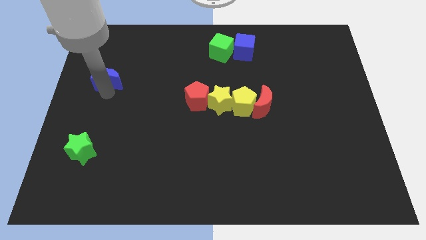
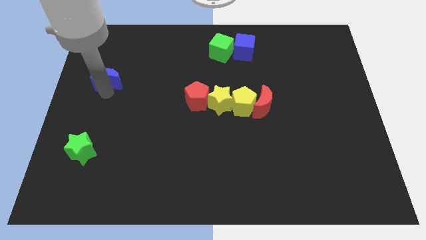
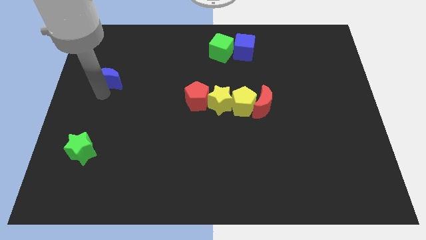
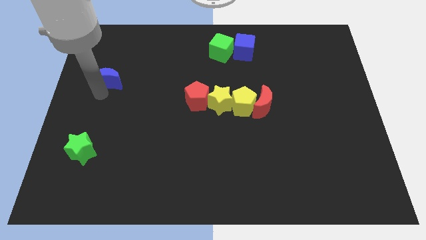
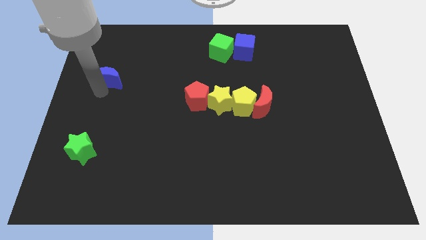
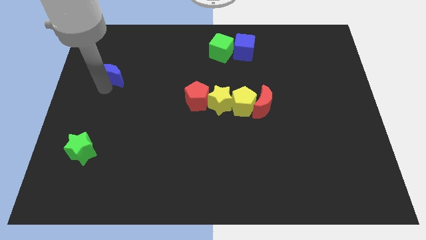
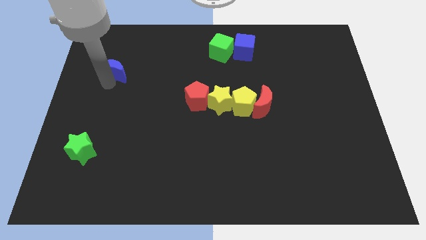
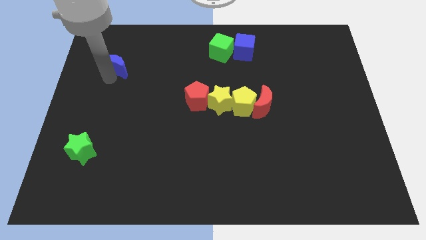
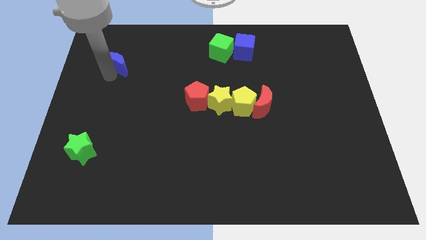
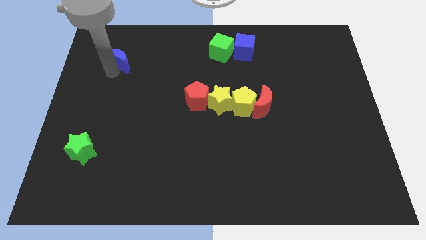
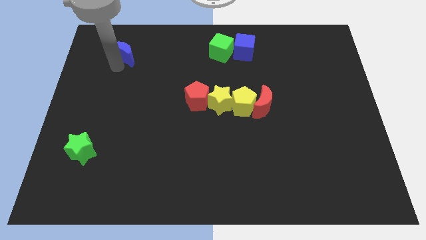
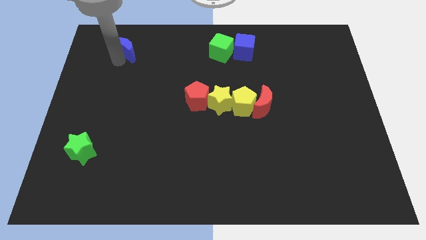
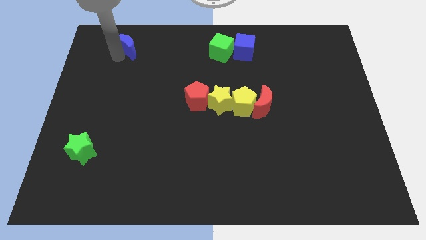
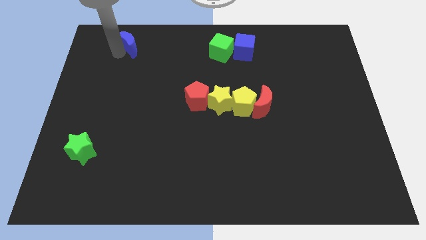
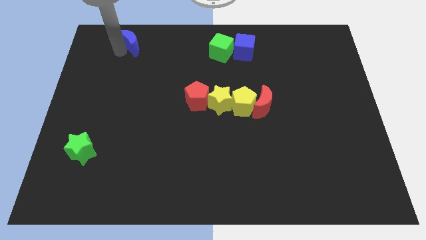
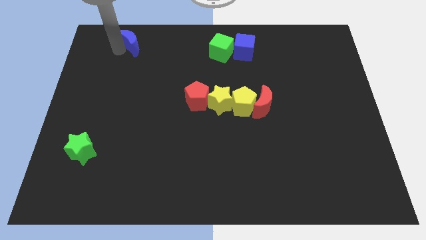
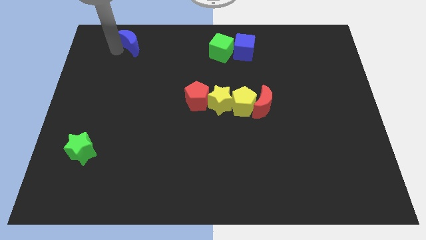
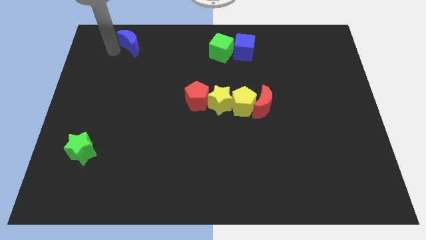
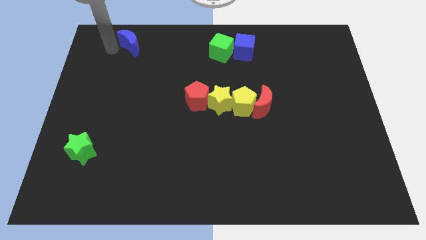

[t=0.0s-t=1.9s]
place the blue crescent slightly towards the top center of the board

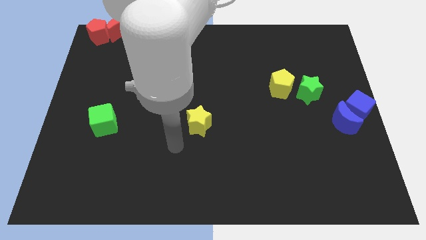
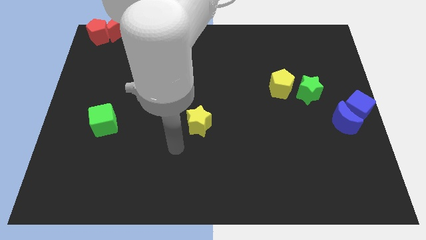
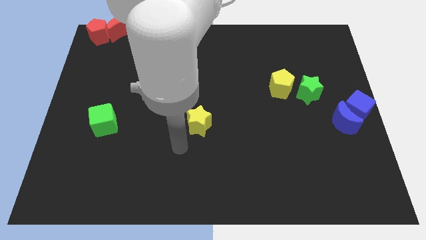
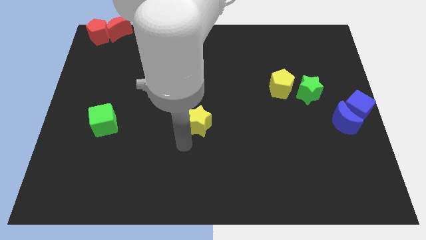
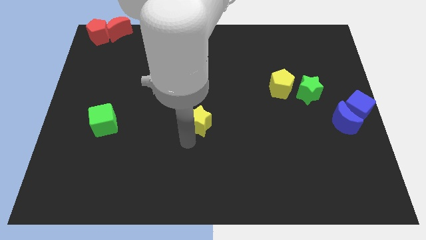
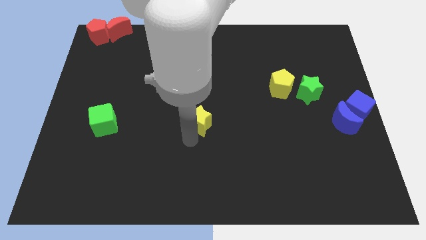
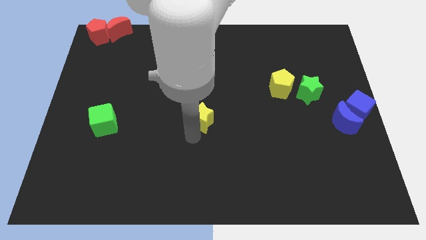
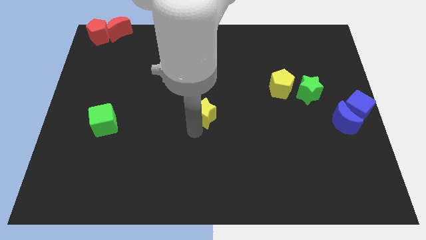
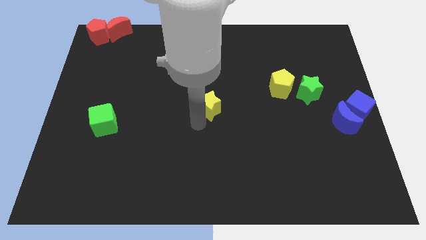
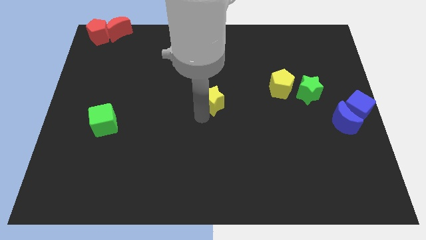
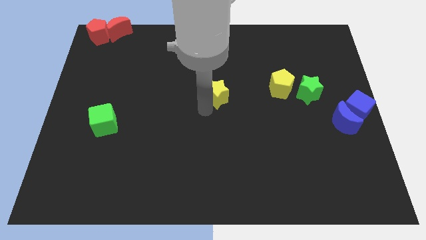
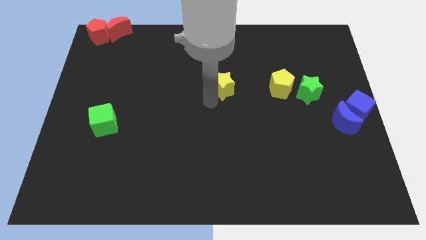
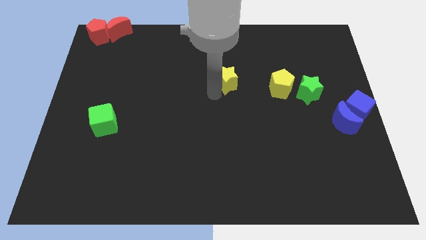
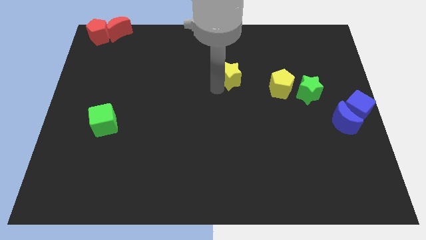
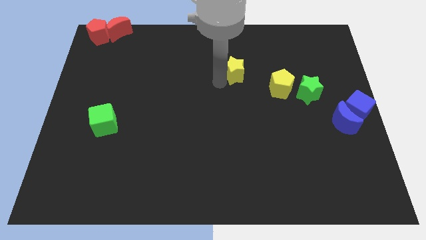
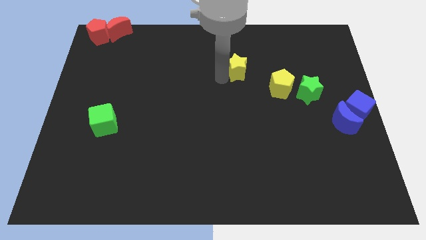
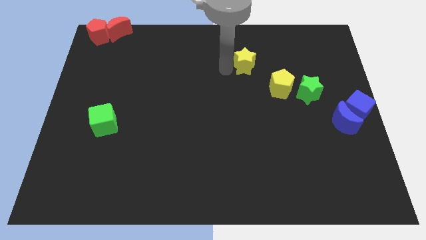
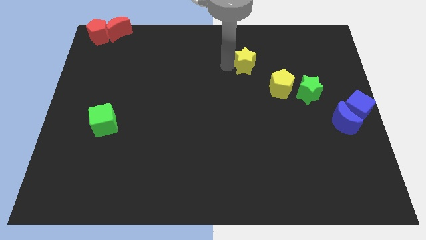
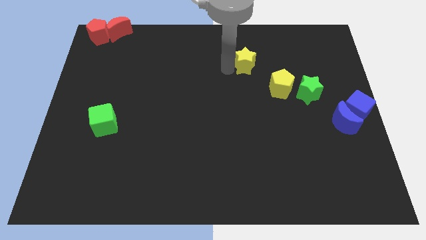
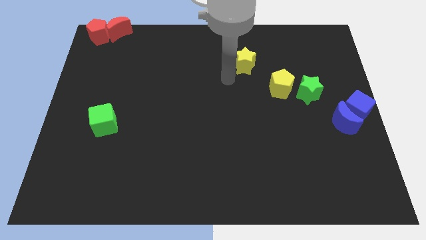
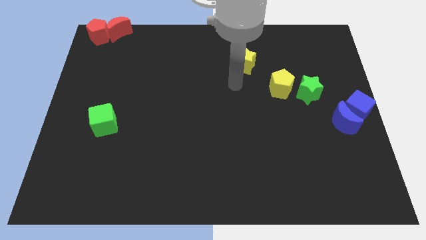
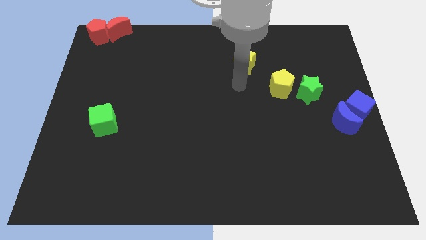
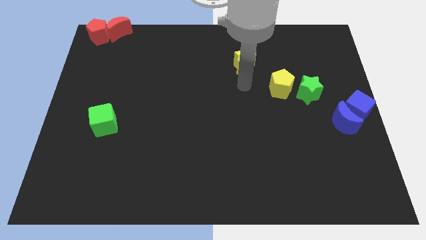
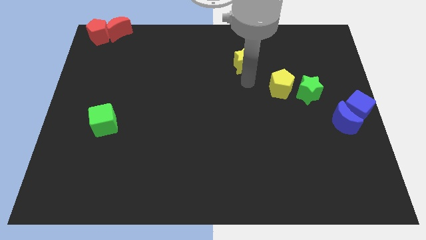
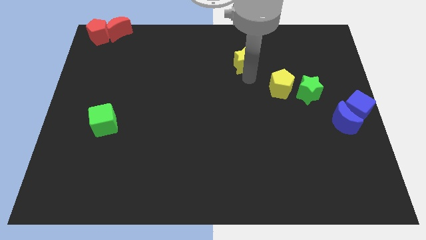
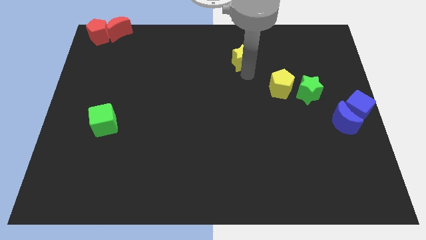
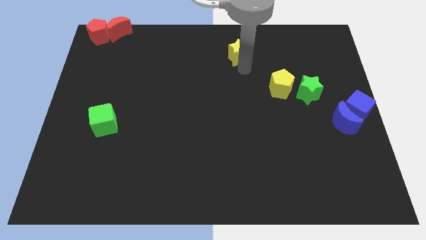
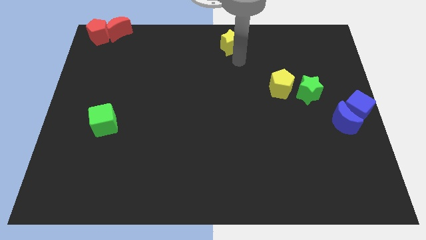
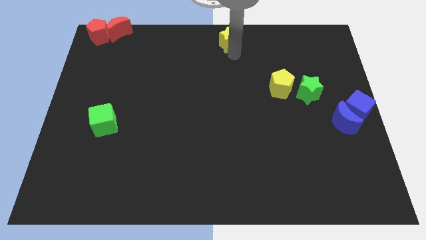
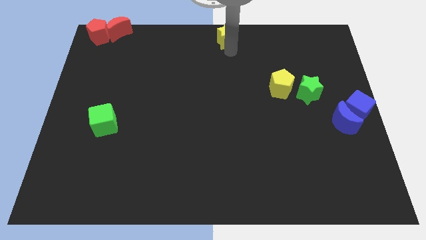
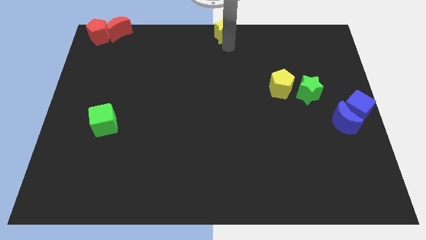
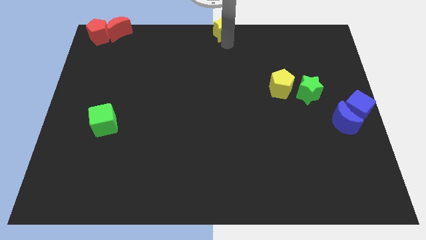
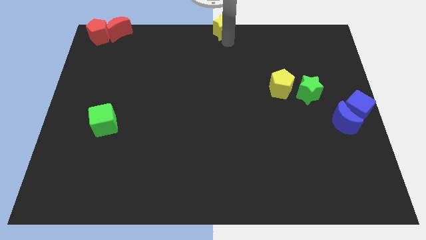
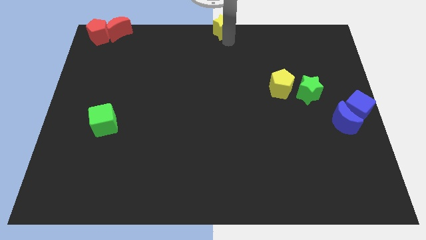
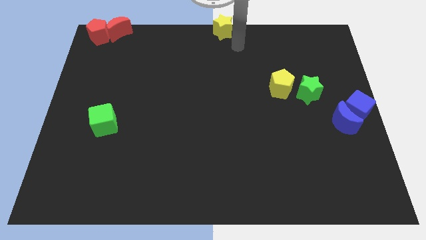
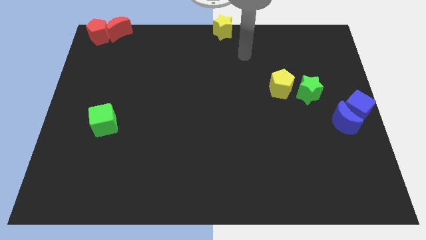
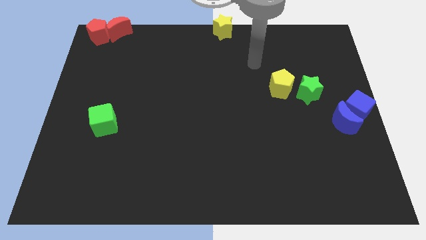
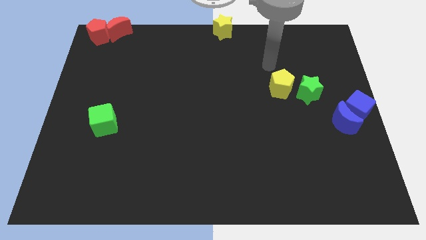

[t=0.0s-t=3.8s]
move the yellow star to the top center

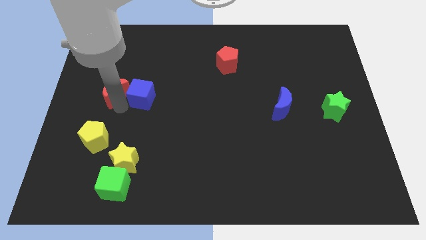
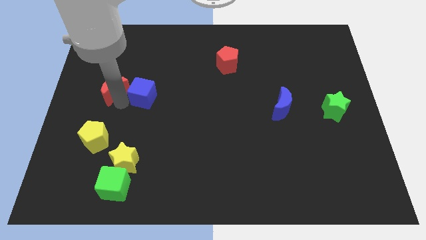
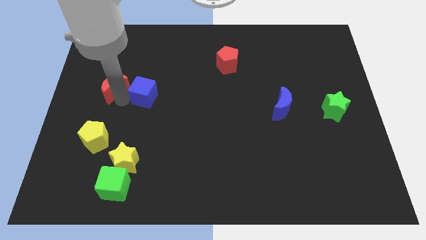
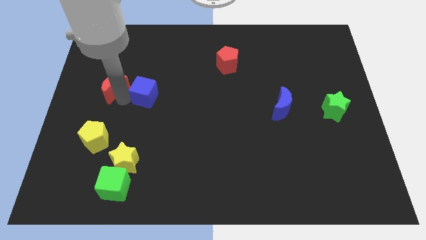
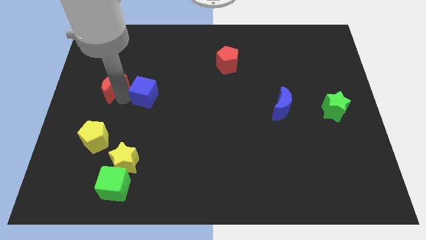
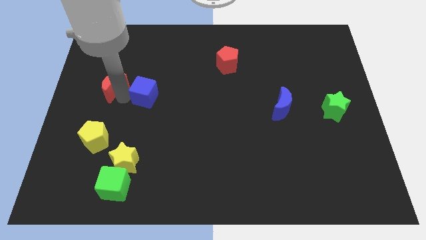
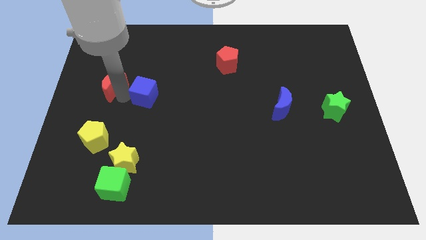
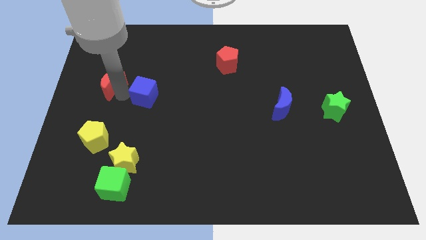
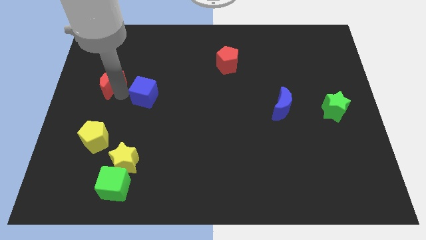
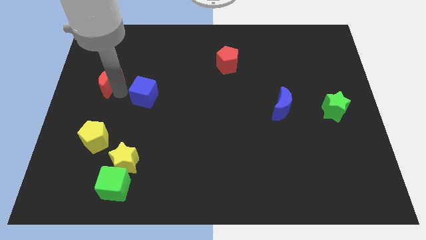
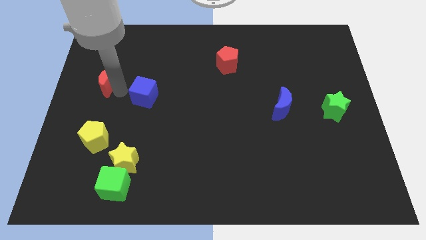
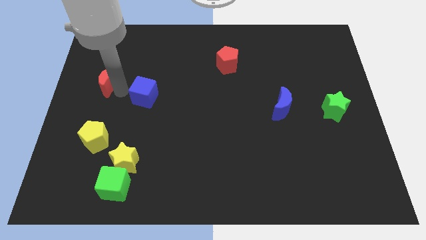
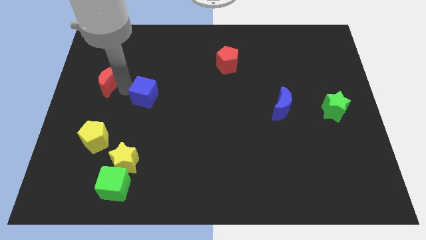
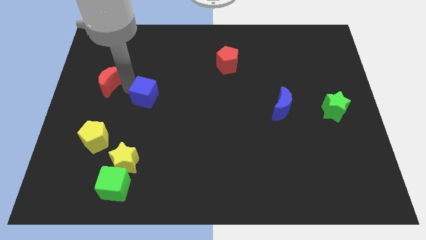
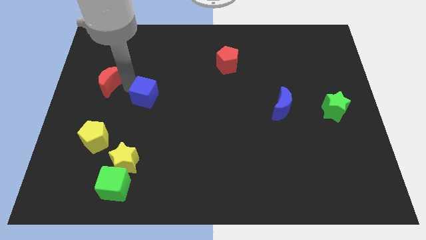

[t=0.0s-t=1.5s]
separate the red crescent from the blue cube

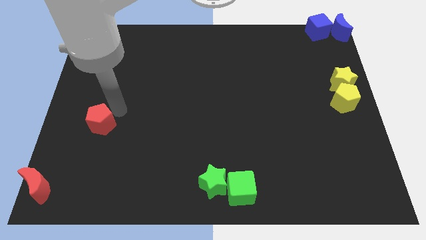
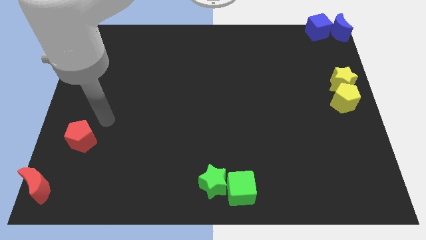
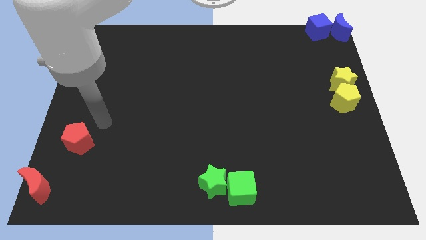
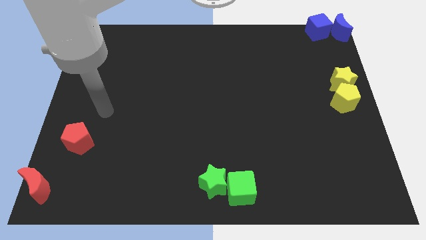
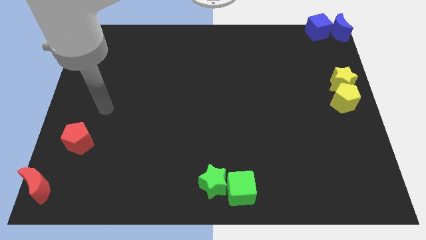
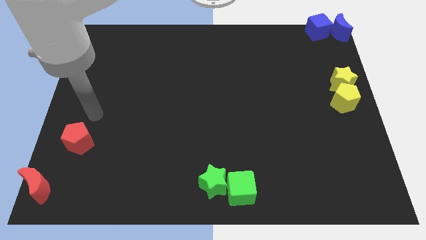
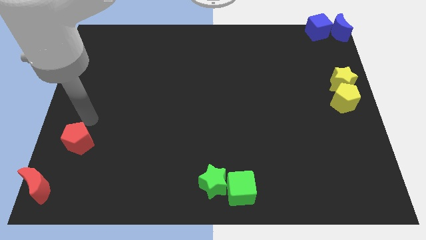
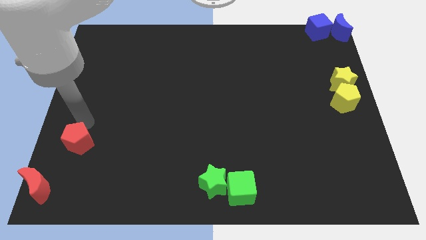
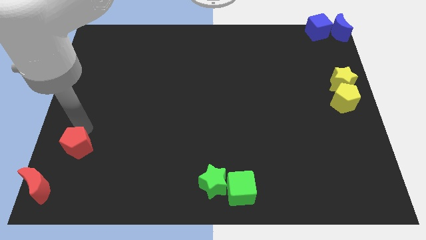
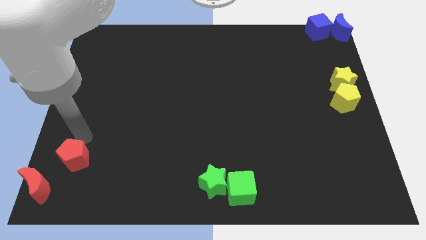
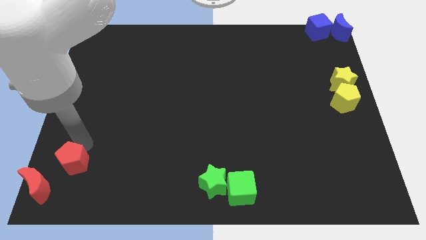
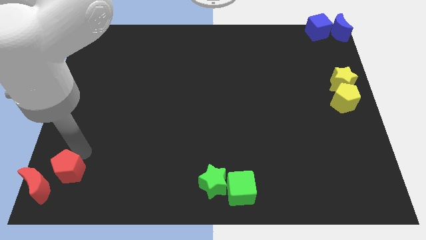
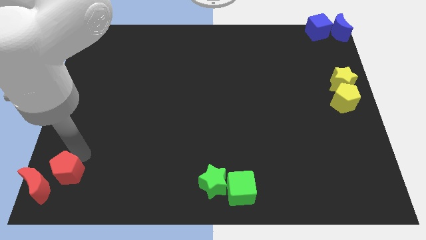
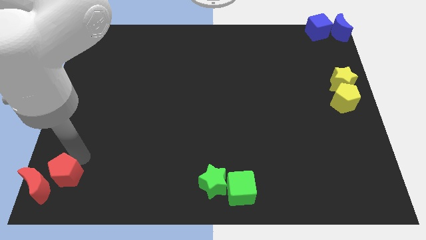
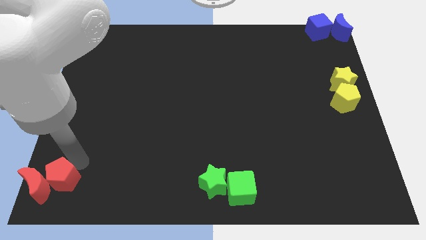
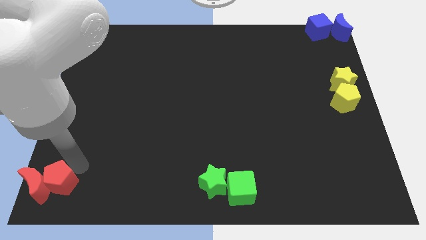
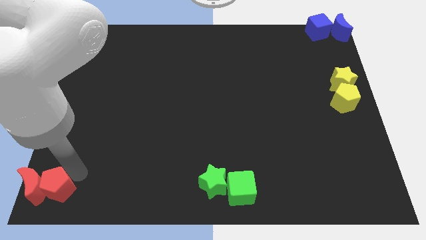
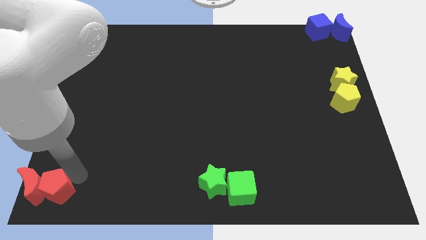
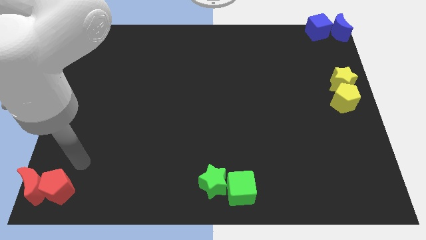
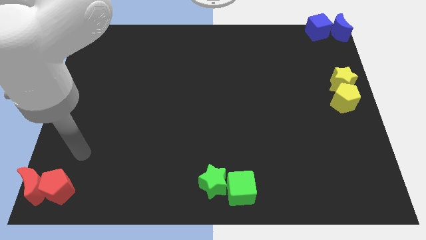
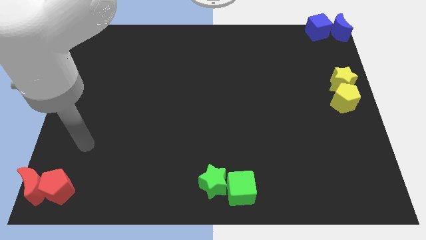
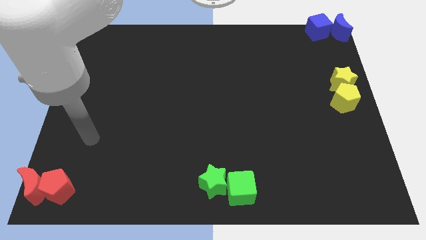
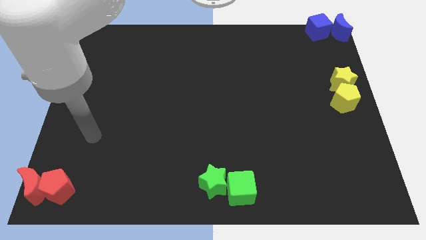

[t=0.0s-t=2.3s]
place red pentagon beside red crescent
